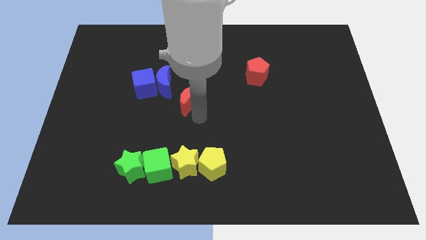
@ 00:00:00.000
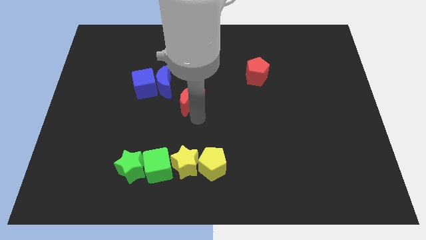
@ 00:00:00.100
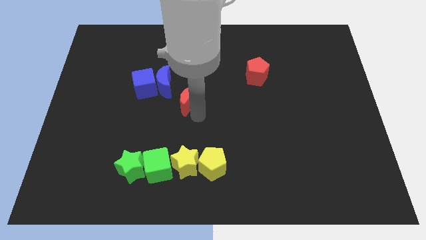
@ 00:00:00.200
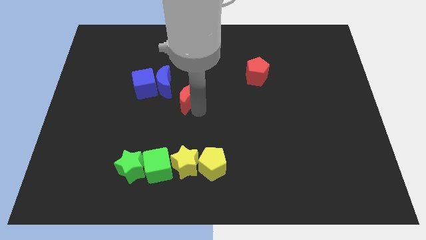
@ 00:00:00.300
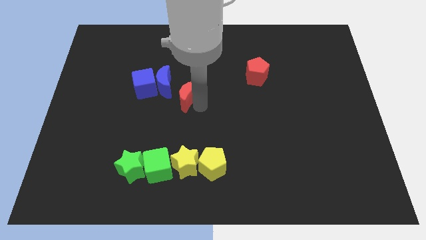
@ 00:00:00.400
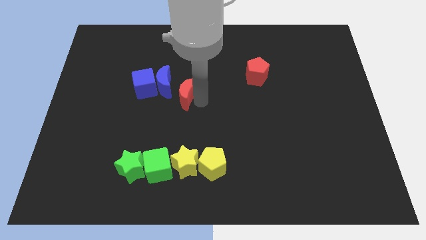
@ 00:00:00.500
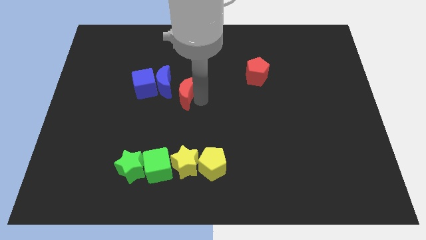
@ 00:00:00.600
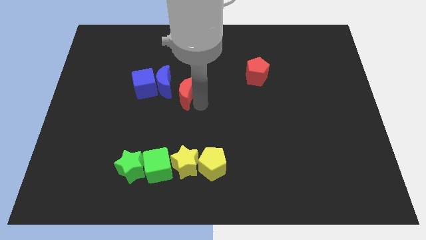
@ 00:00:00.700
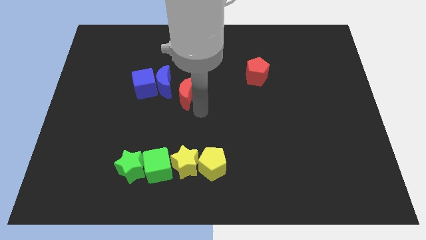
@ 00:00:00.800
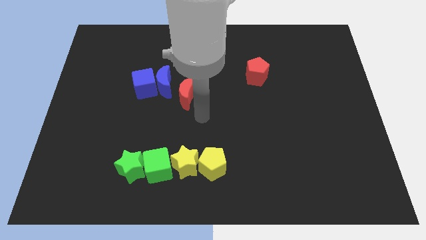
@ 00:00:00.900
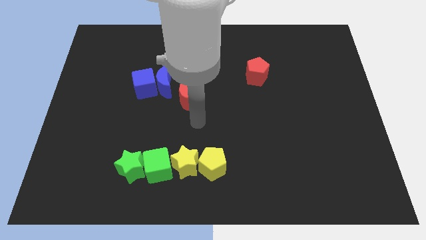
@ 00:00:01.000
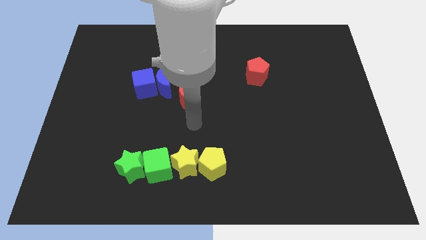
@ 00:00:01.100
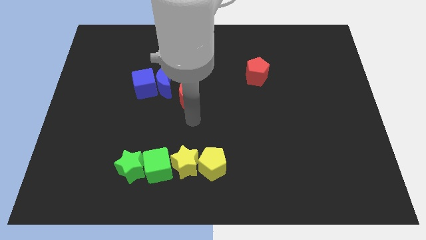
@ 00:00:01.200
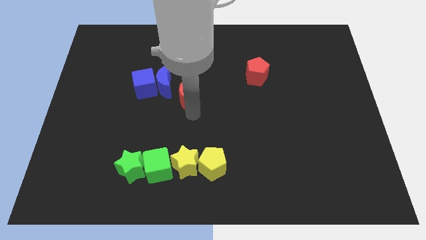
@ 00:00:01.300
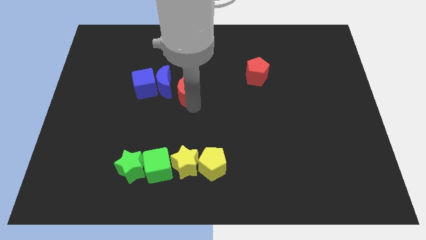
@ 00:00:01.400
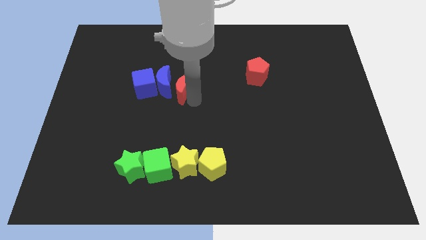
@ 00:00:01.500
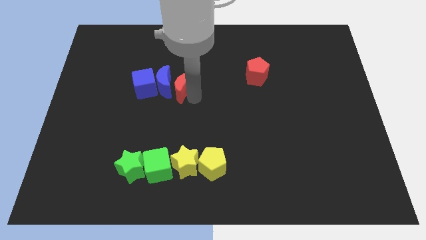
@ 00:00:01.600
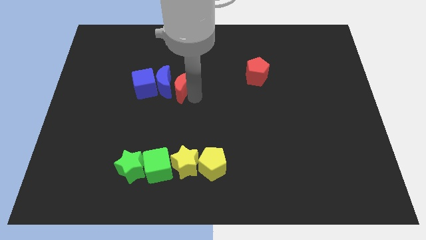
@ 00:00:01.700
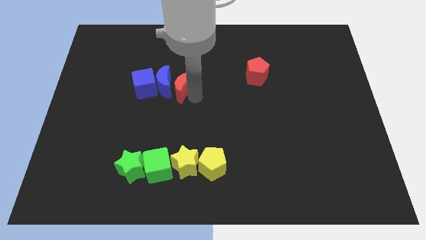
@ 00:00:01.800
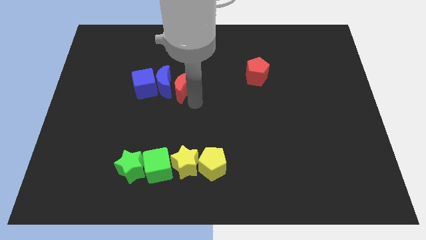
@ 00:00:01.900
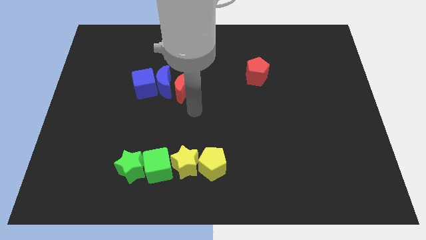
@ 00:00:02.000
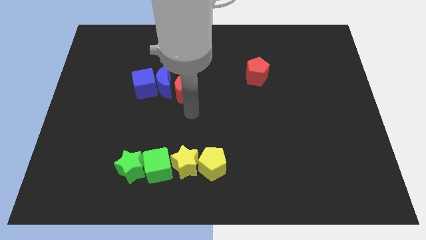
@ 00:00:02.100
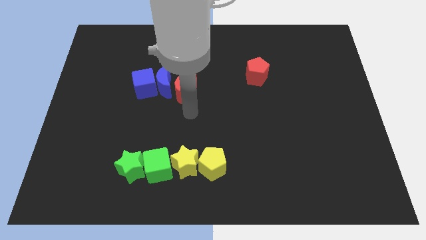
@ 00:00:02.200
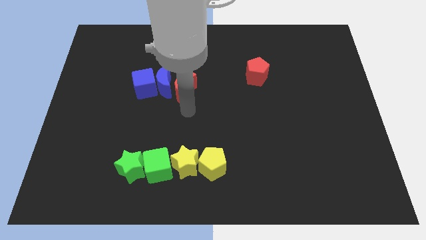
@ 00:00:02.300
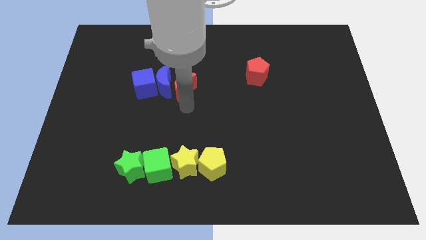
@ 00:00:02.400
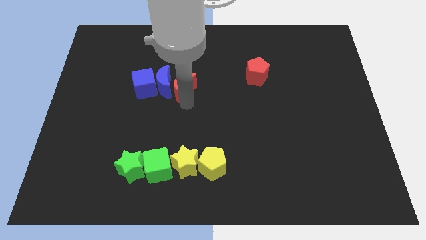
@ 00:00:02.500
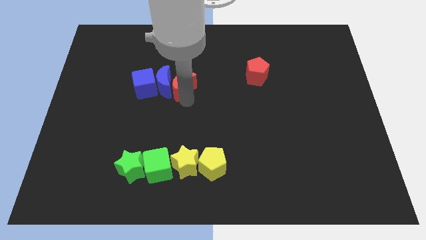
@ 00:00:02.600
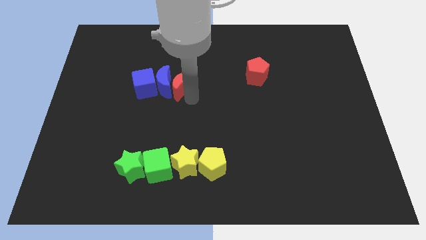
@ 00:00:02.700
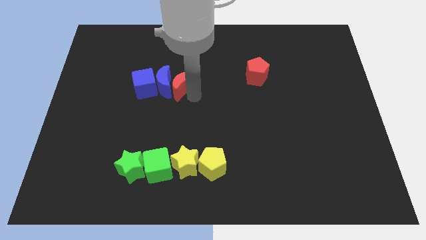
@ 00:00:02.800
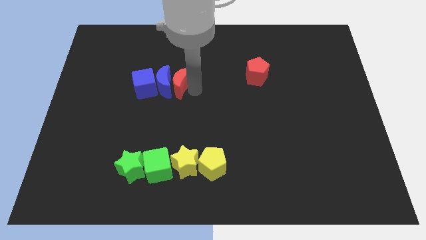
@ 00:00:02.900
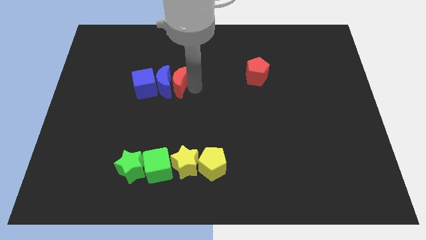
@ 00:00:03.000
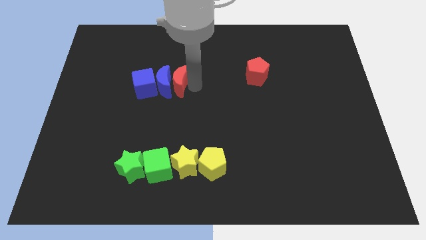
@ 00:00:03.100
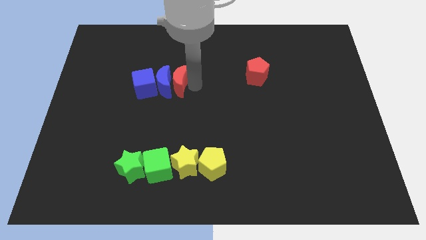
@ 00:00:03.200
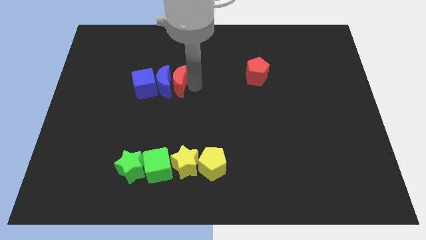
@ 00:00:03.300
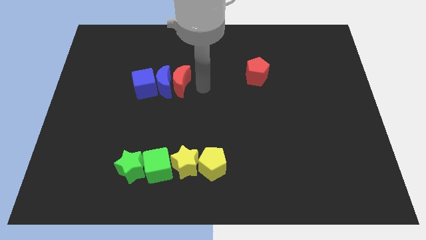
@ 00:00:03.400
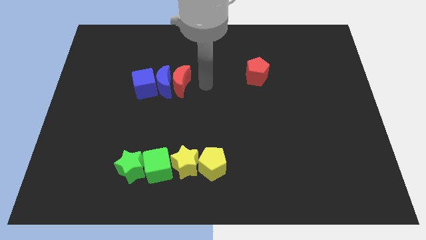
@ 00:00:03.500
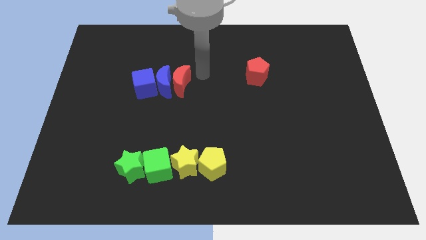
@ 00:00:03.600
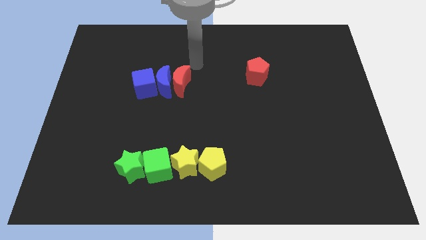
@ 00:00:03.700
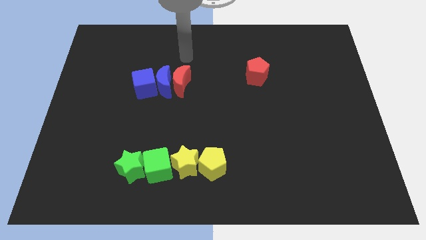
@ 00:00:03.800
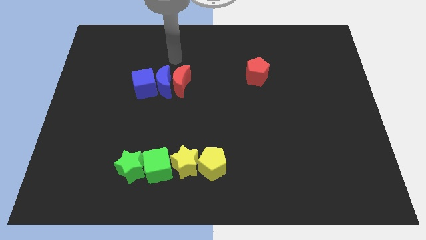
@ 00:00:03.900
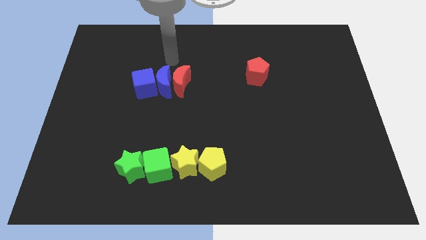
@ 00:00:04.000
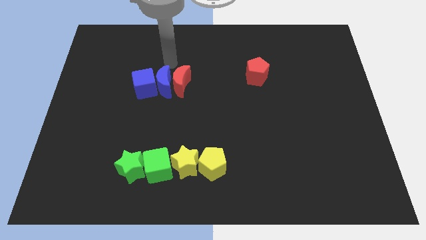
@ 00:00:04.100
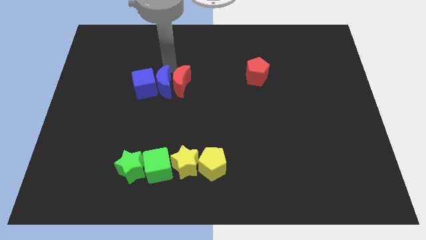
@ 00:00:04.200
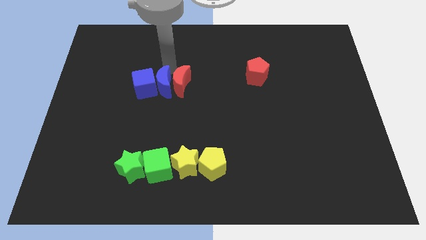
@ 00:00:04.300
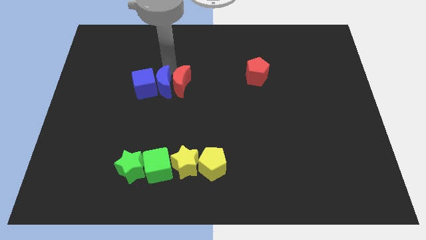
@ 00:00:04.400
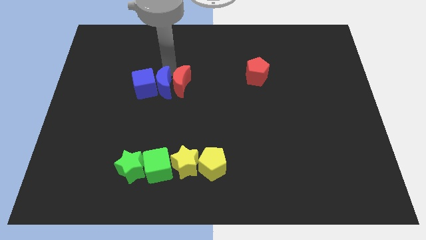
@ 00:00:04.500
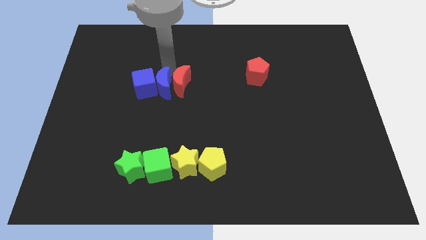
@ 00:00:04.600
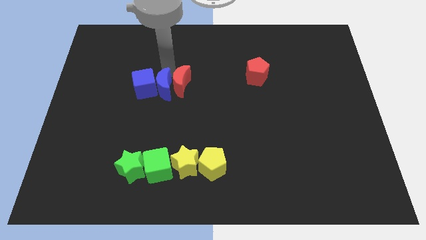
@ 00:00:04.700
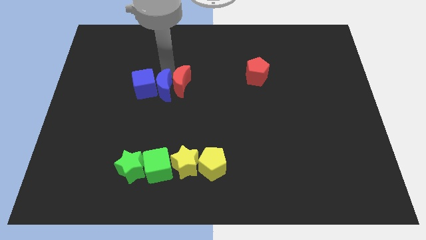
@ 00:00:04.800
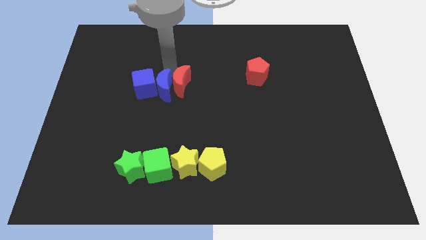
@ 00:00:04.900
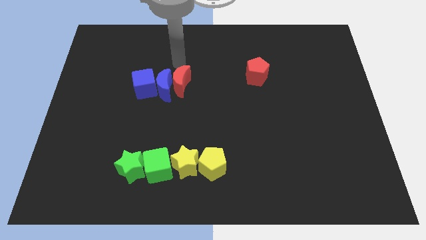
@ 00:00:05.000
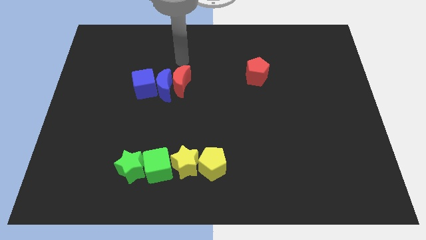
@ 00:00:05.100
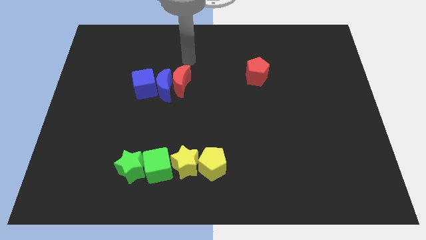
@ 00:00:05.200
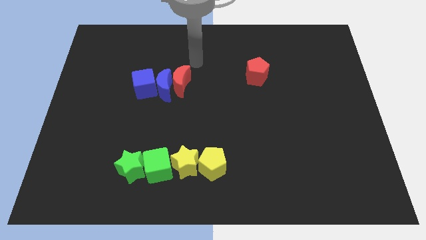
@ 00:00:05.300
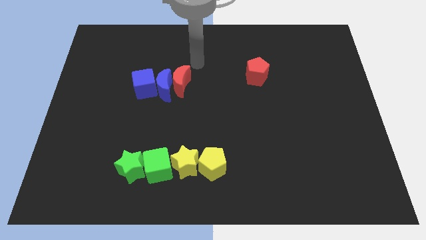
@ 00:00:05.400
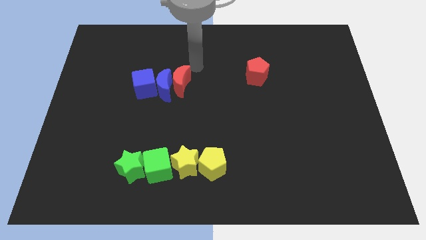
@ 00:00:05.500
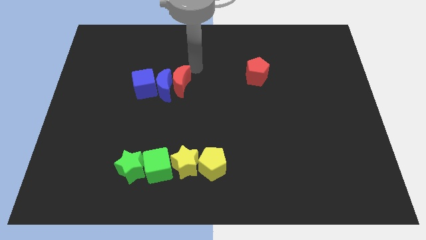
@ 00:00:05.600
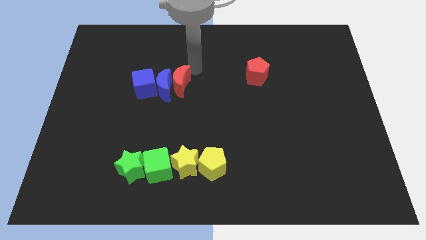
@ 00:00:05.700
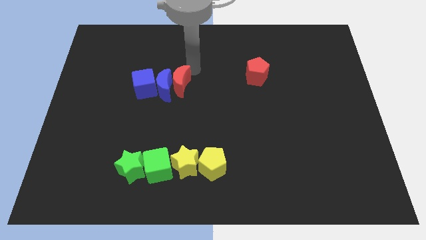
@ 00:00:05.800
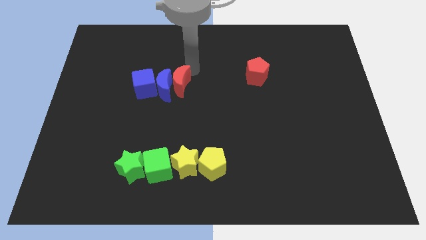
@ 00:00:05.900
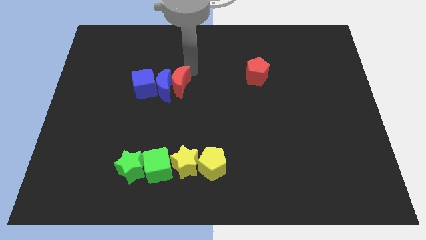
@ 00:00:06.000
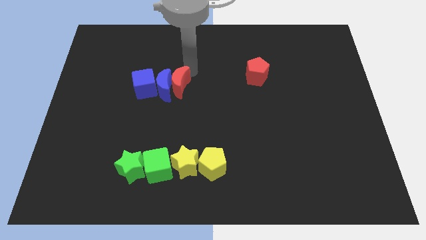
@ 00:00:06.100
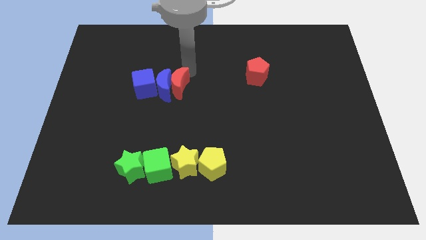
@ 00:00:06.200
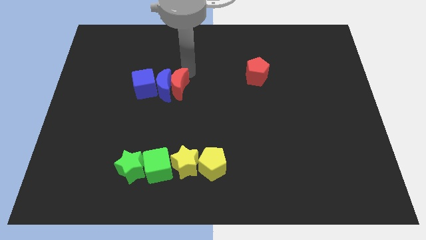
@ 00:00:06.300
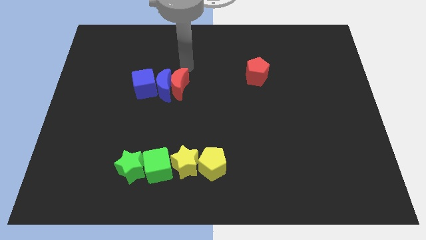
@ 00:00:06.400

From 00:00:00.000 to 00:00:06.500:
place the red moon on right side of blue moon

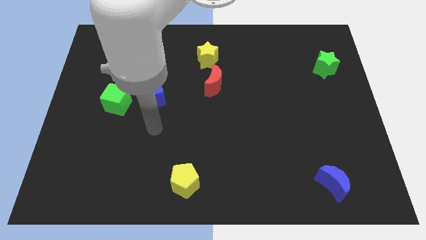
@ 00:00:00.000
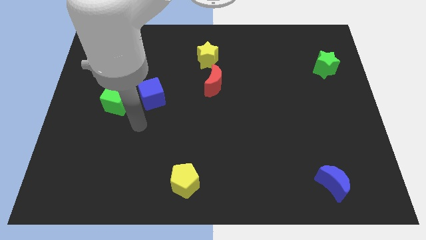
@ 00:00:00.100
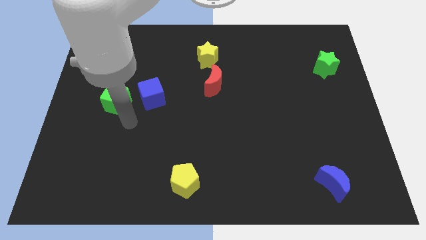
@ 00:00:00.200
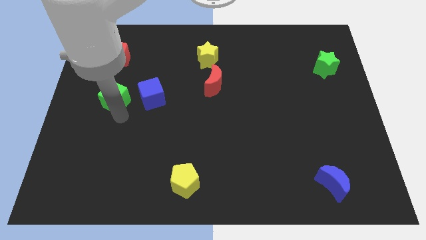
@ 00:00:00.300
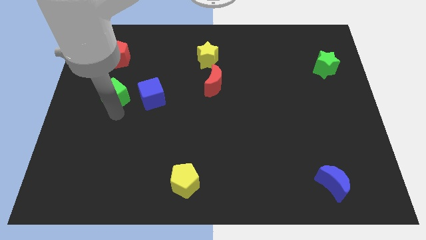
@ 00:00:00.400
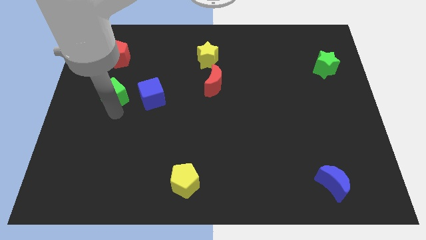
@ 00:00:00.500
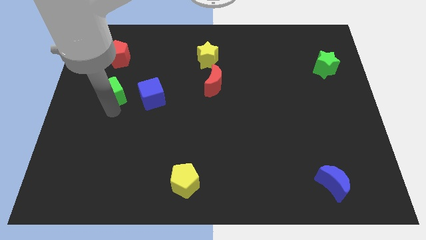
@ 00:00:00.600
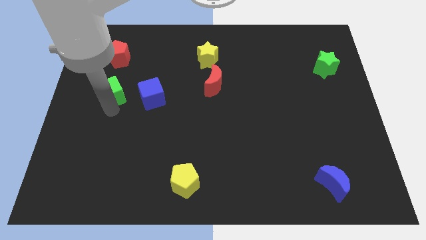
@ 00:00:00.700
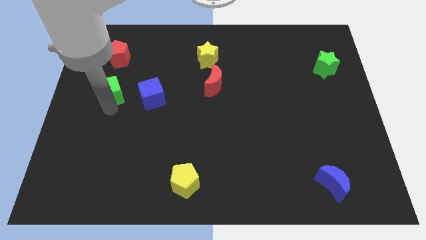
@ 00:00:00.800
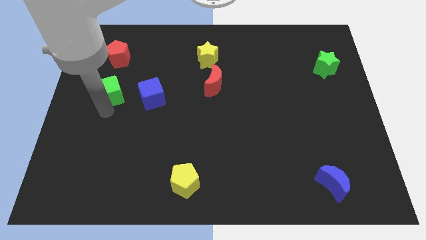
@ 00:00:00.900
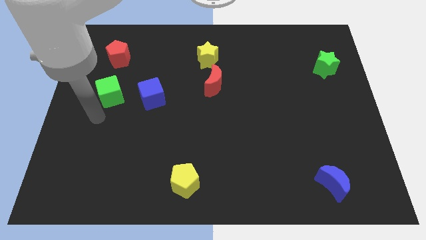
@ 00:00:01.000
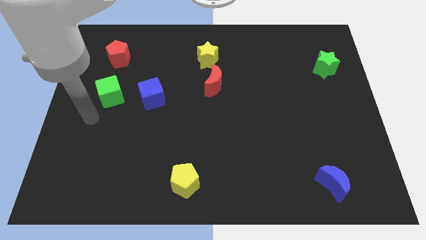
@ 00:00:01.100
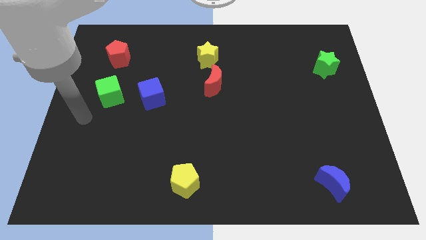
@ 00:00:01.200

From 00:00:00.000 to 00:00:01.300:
tap the bottom side of the green cube

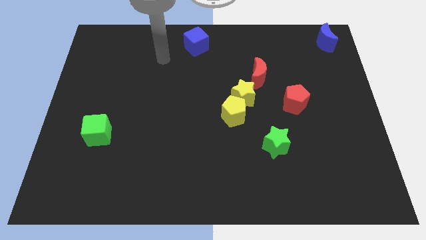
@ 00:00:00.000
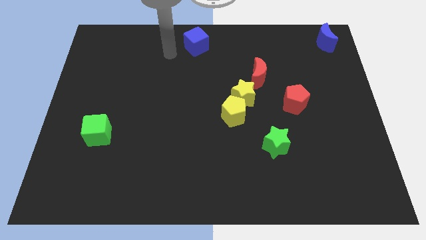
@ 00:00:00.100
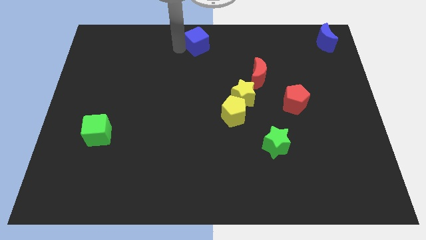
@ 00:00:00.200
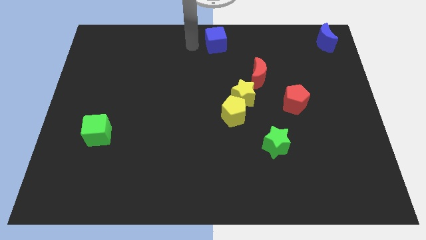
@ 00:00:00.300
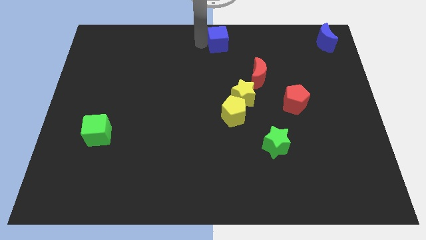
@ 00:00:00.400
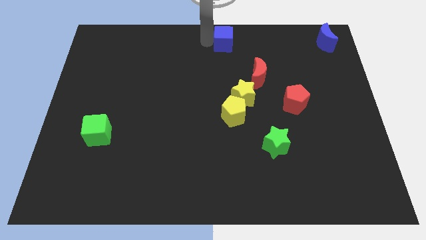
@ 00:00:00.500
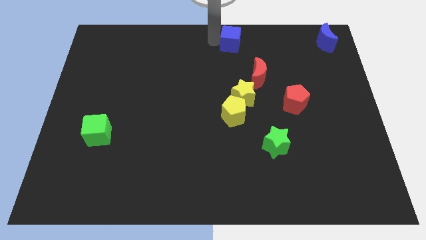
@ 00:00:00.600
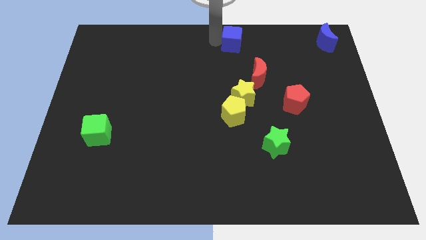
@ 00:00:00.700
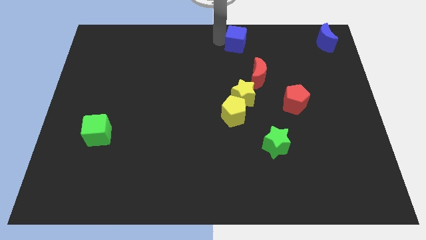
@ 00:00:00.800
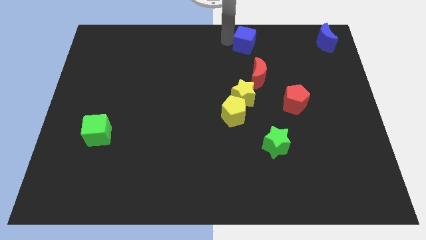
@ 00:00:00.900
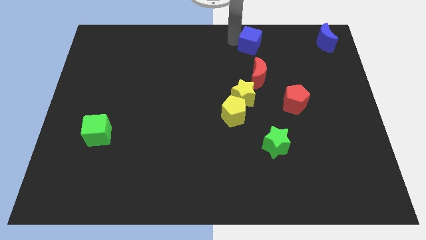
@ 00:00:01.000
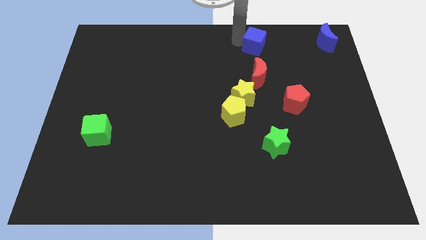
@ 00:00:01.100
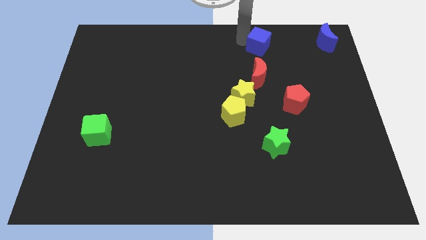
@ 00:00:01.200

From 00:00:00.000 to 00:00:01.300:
move the blue cube above the red crescent
